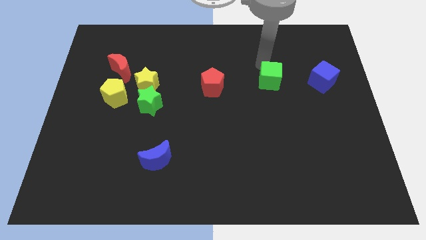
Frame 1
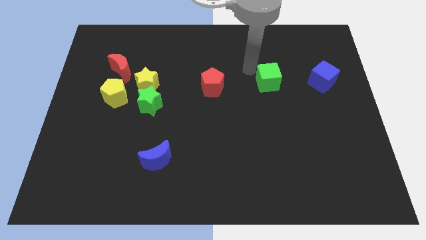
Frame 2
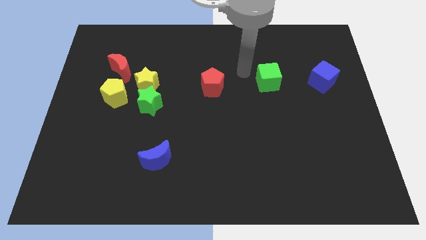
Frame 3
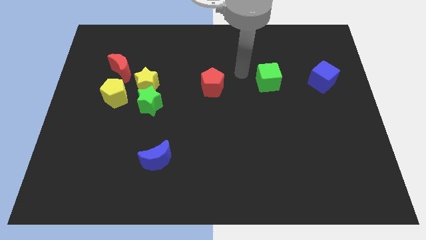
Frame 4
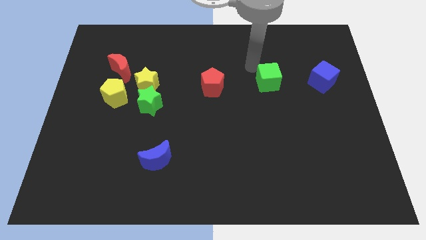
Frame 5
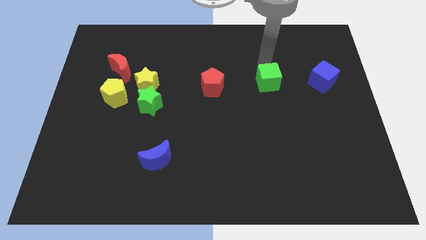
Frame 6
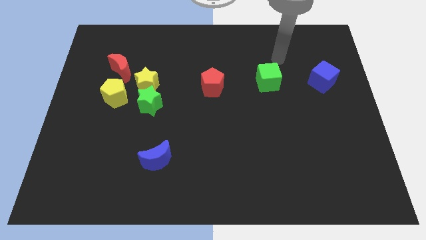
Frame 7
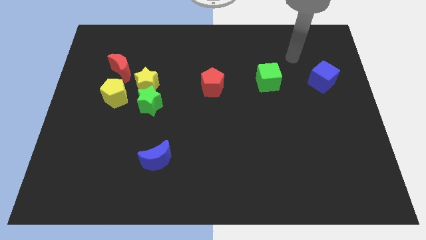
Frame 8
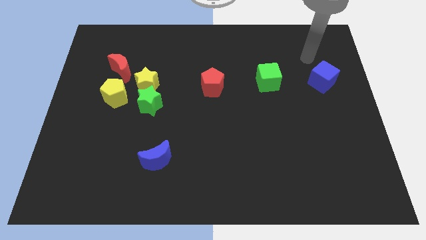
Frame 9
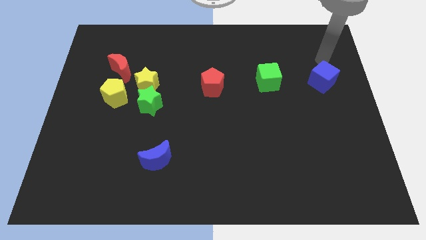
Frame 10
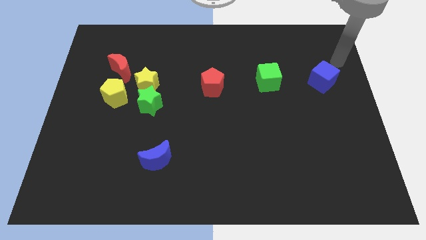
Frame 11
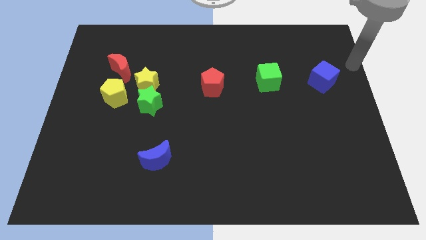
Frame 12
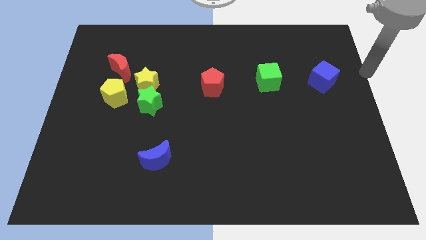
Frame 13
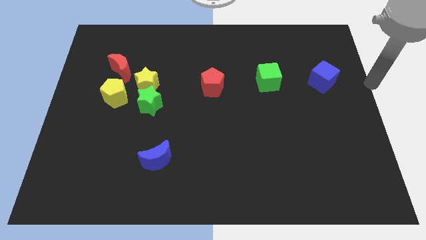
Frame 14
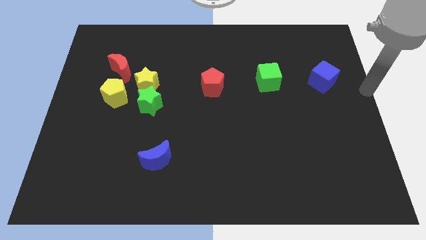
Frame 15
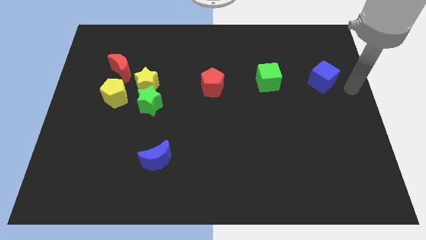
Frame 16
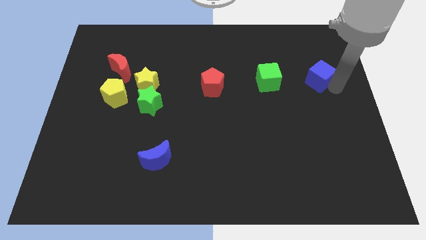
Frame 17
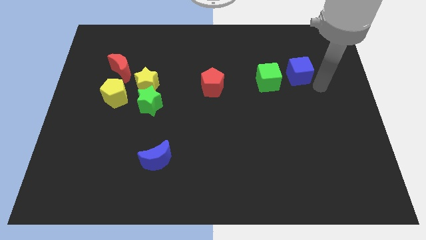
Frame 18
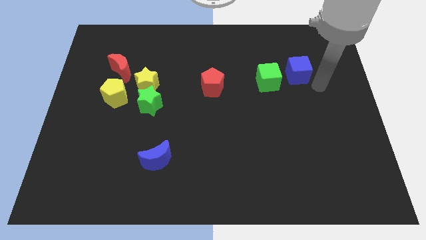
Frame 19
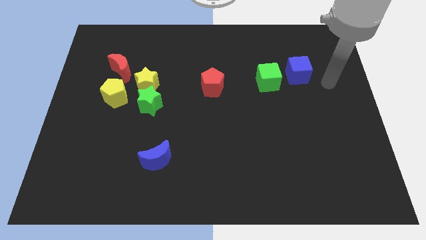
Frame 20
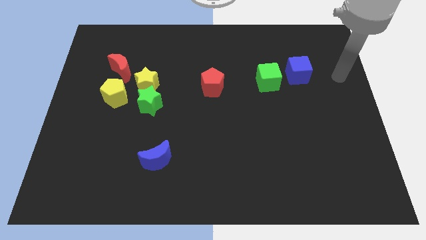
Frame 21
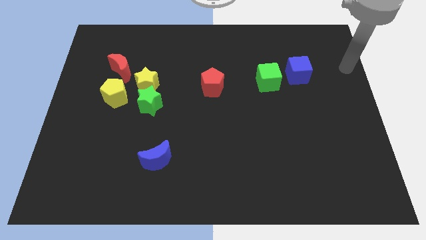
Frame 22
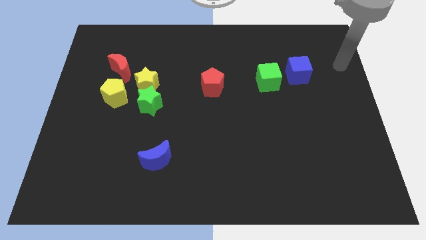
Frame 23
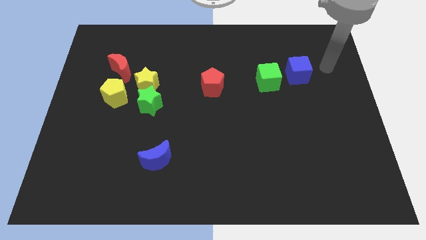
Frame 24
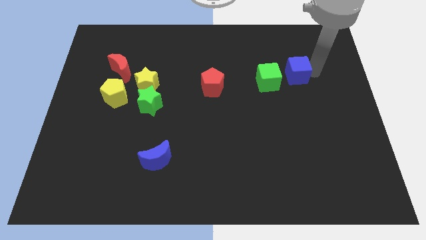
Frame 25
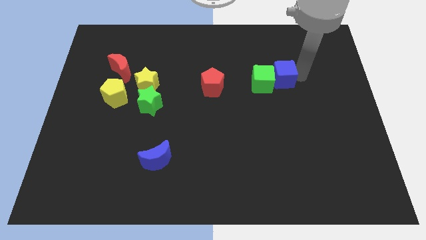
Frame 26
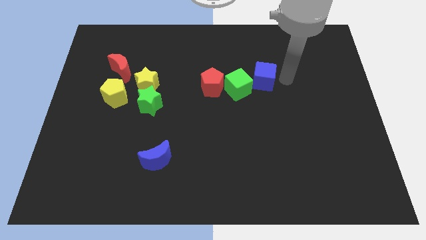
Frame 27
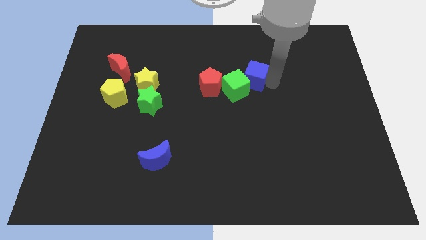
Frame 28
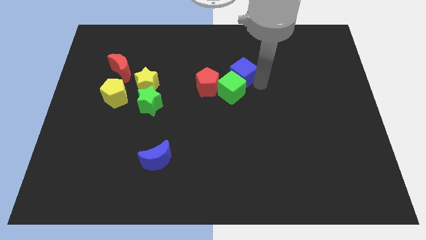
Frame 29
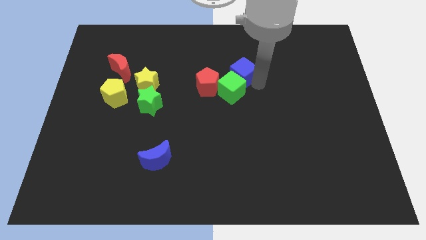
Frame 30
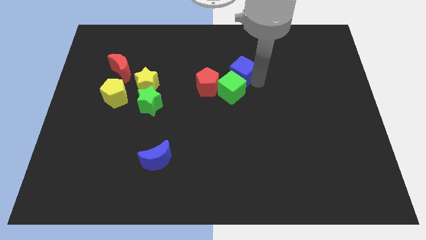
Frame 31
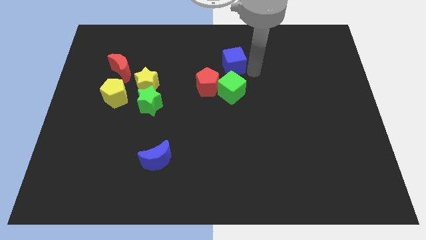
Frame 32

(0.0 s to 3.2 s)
push the blue cube into the green cube

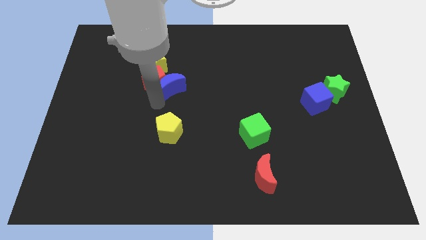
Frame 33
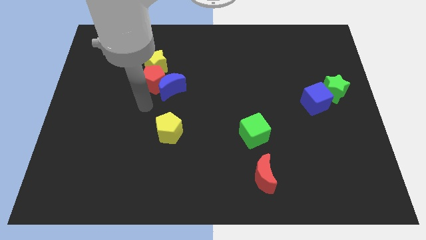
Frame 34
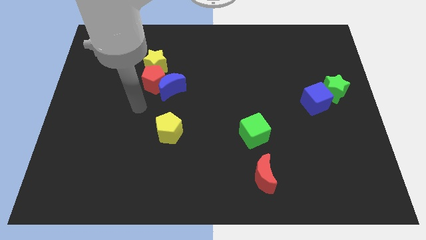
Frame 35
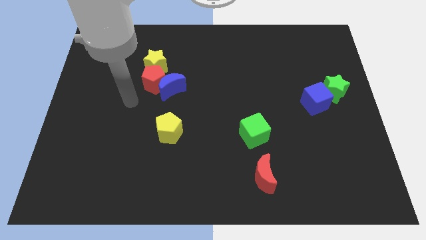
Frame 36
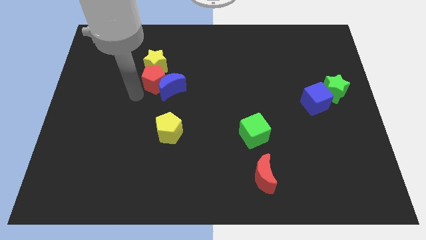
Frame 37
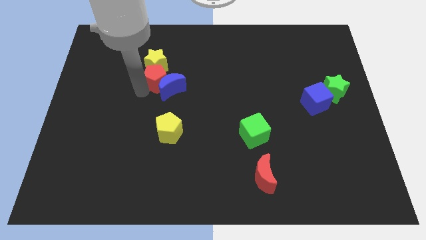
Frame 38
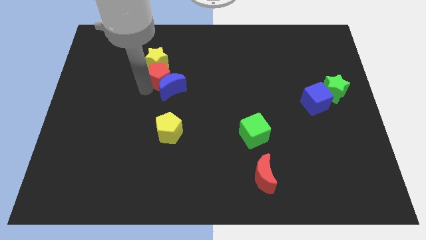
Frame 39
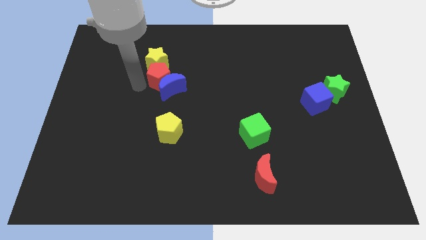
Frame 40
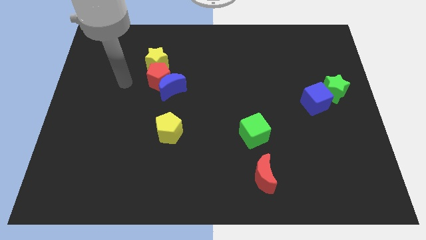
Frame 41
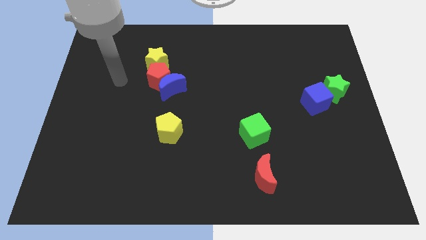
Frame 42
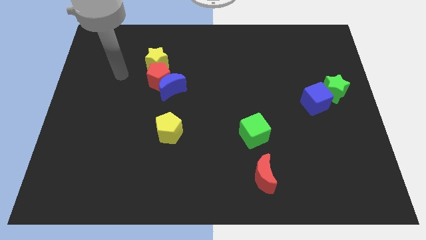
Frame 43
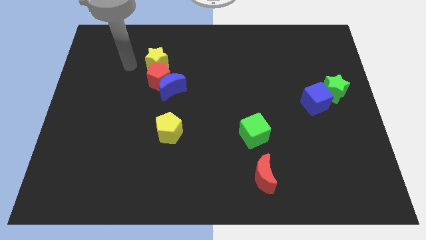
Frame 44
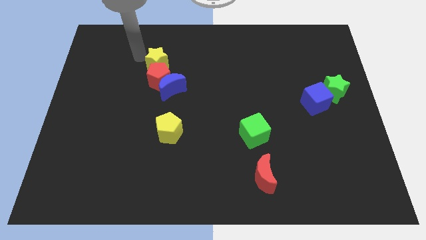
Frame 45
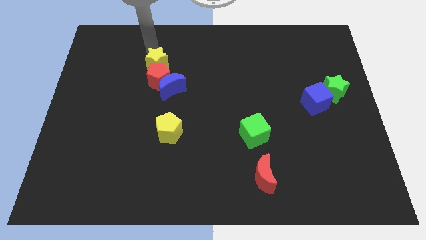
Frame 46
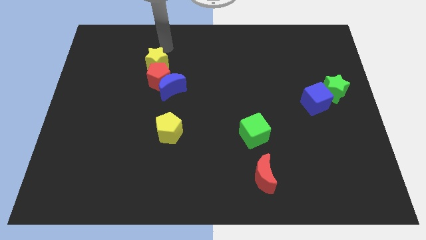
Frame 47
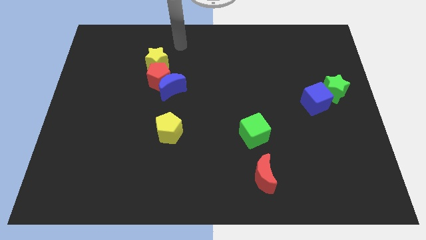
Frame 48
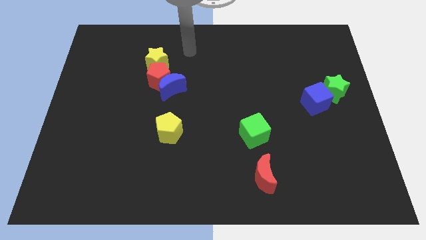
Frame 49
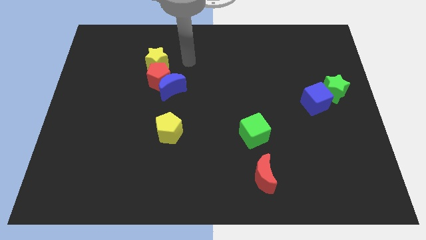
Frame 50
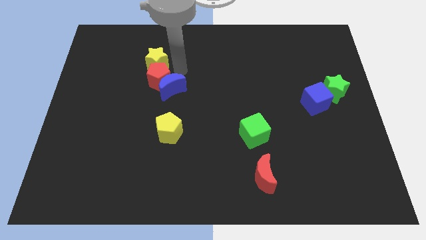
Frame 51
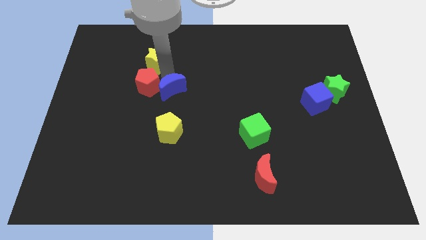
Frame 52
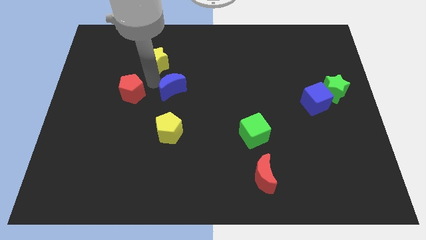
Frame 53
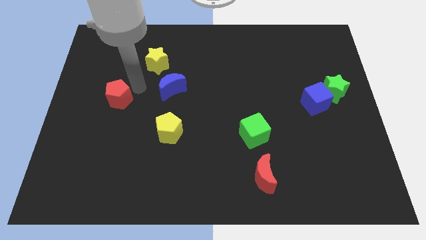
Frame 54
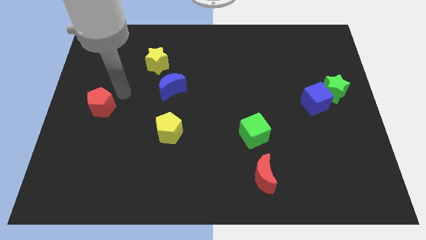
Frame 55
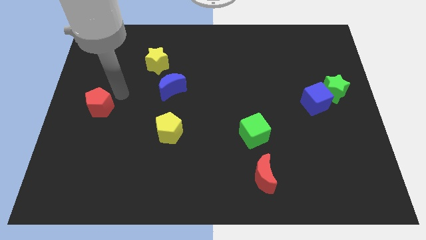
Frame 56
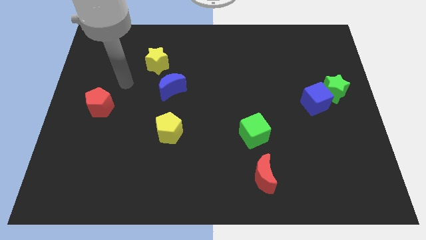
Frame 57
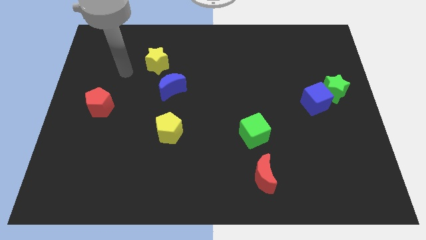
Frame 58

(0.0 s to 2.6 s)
move the red pentagon to the top left of the yellow pentagon

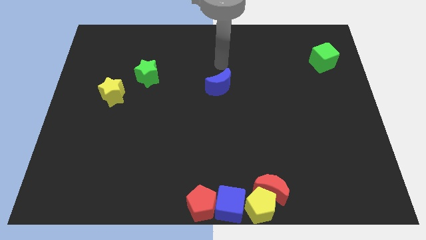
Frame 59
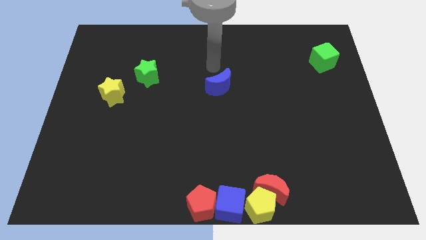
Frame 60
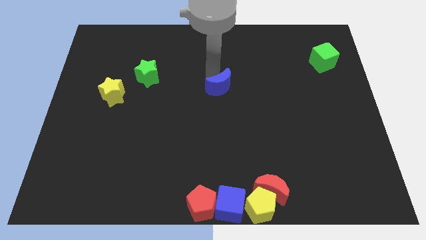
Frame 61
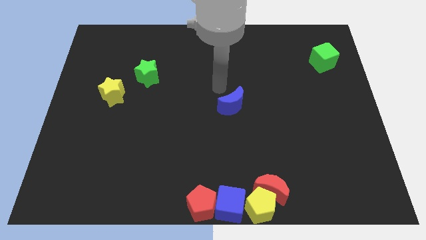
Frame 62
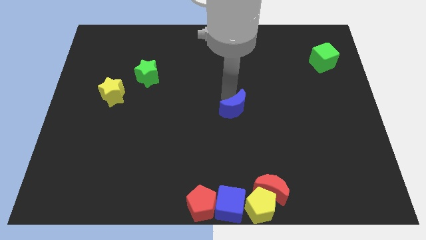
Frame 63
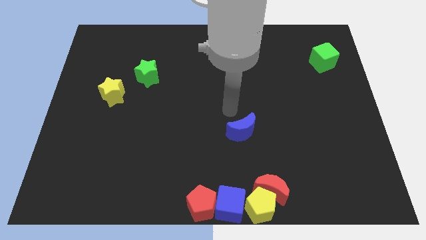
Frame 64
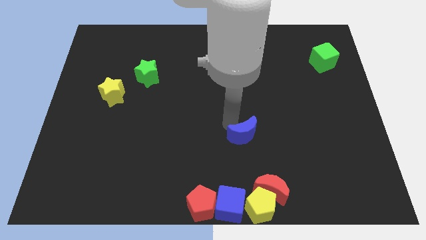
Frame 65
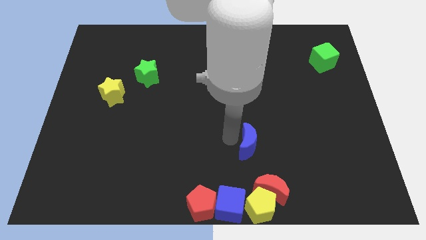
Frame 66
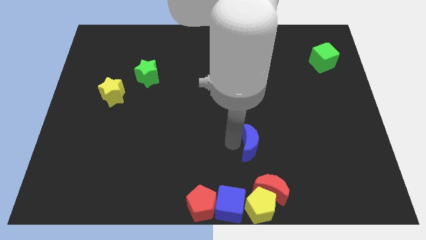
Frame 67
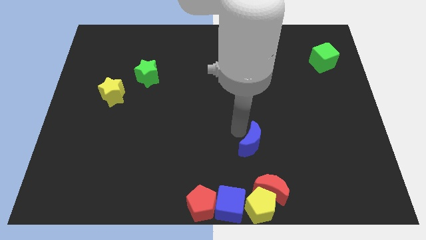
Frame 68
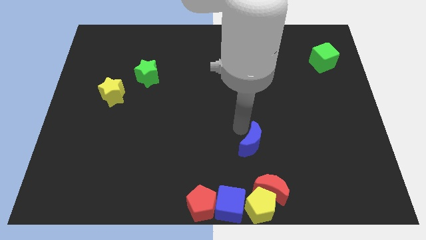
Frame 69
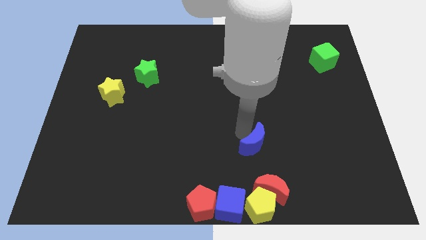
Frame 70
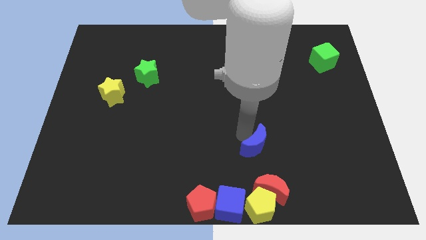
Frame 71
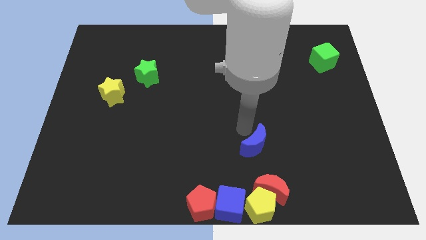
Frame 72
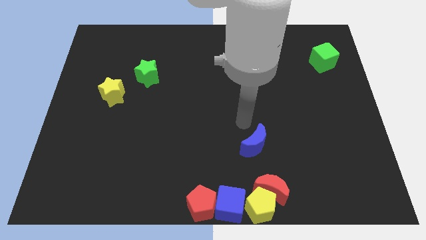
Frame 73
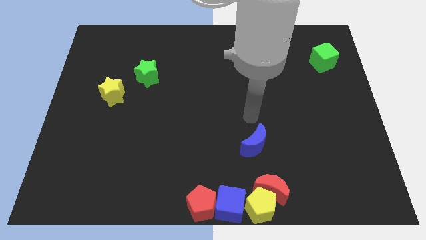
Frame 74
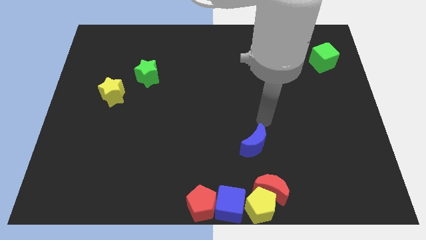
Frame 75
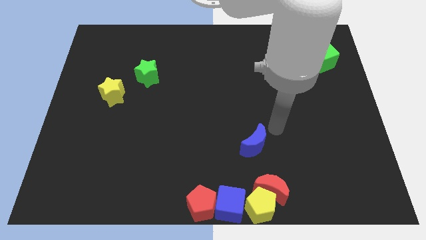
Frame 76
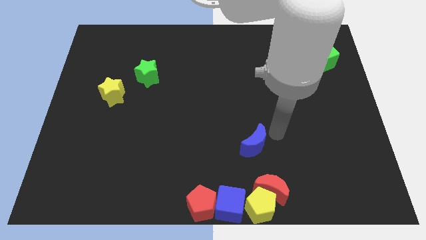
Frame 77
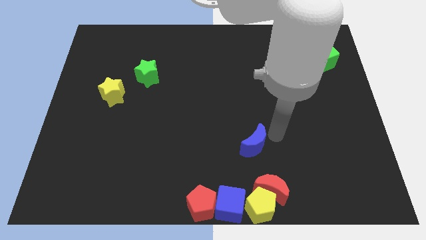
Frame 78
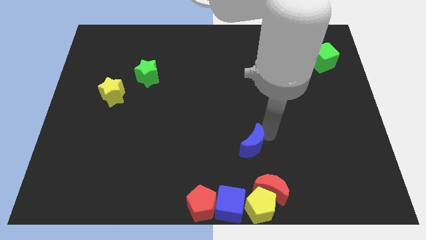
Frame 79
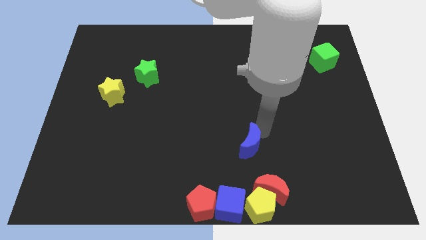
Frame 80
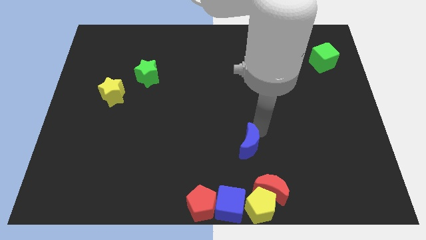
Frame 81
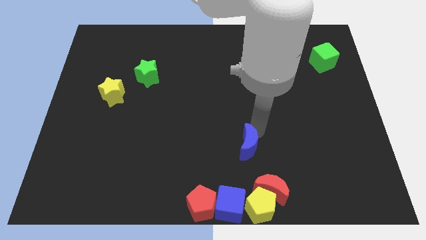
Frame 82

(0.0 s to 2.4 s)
place the blue moon above the red moon

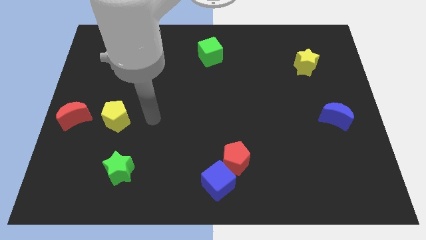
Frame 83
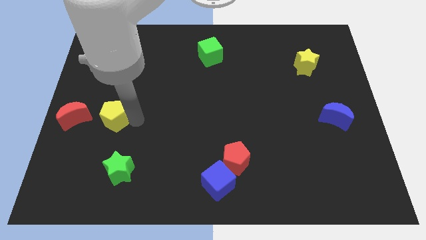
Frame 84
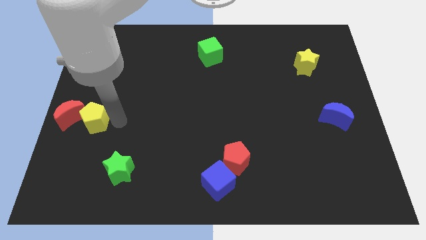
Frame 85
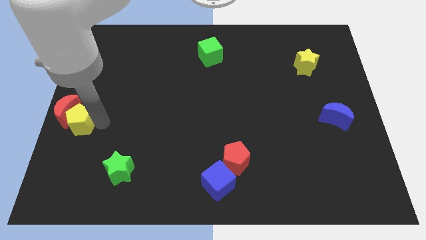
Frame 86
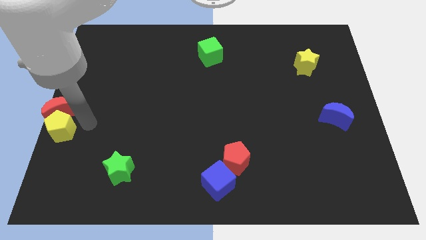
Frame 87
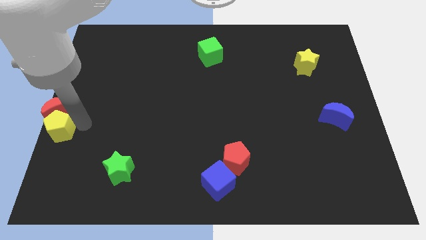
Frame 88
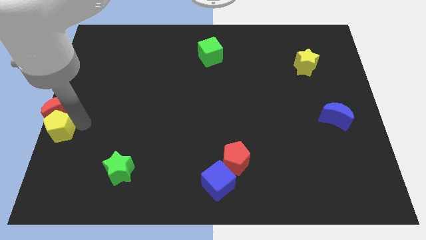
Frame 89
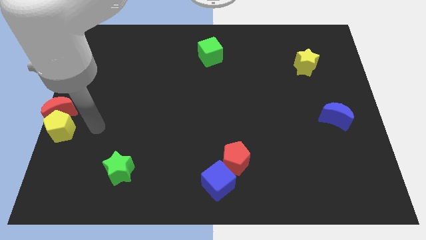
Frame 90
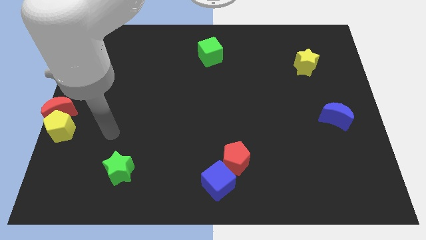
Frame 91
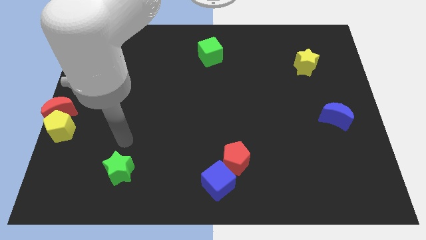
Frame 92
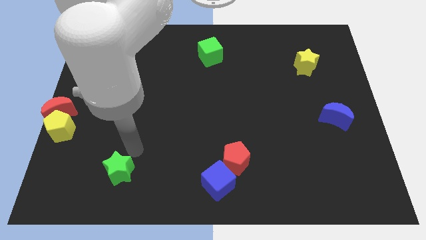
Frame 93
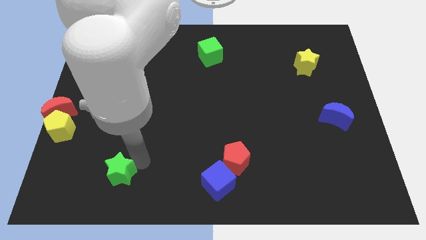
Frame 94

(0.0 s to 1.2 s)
move the arm away from the yellow pentagon
